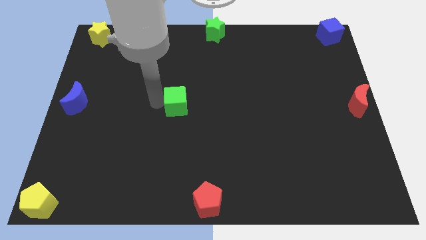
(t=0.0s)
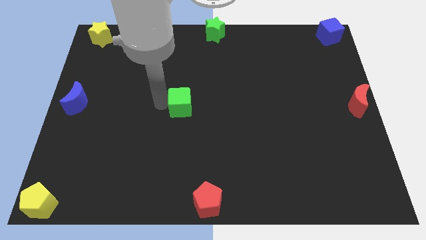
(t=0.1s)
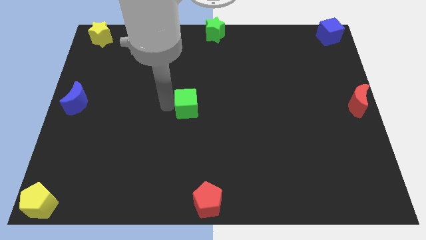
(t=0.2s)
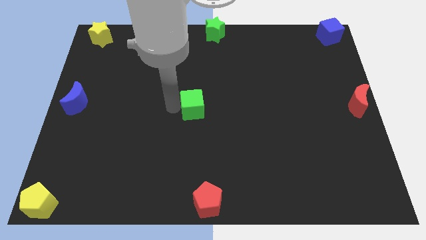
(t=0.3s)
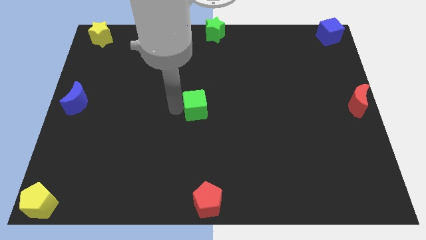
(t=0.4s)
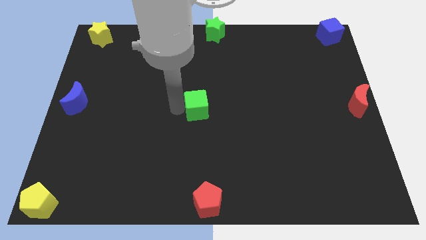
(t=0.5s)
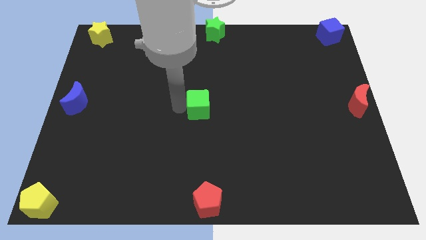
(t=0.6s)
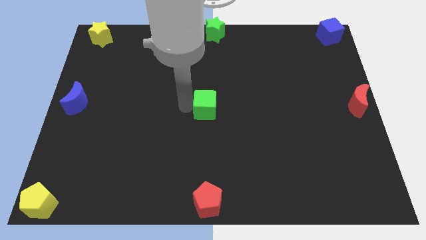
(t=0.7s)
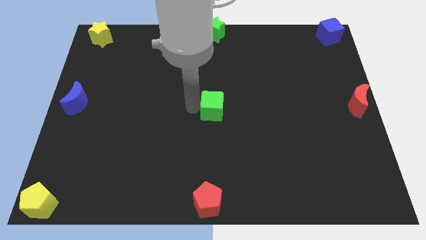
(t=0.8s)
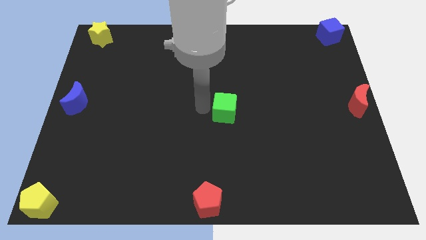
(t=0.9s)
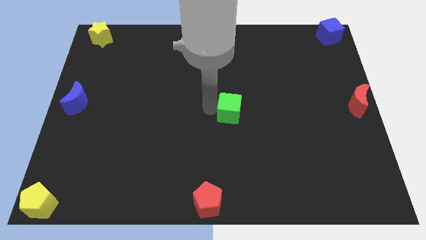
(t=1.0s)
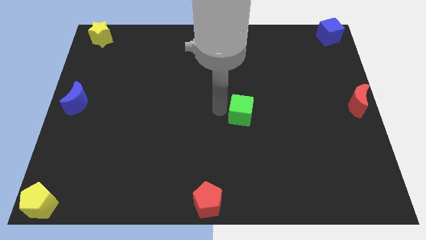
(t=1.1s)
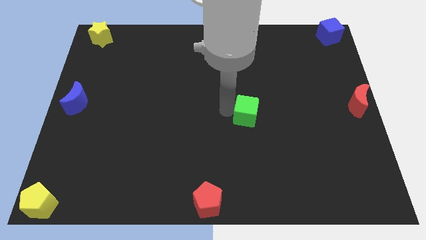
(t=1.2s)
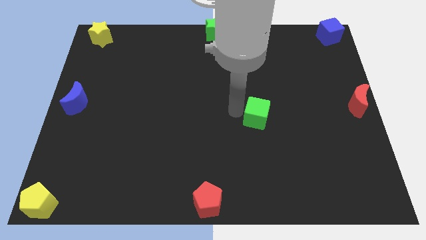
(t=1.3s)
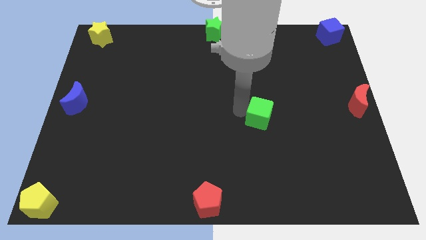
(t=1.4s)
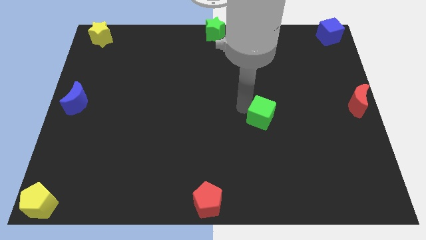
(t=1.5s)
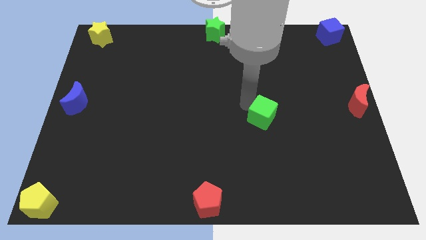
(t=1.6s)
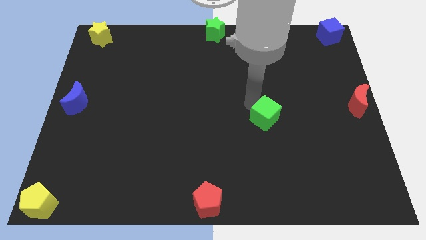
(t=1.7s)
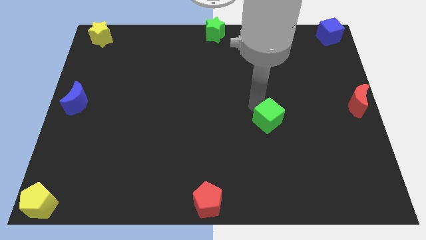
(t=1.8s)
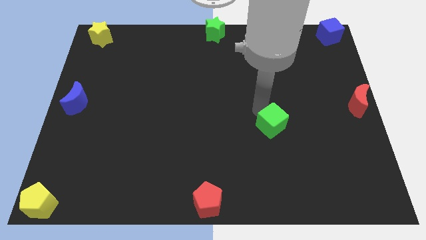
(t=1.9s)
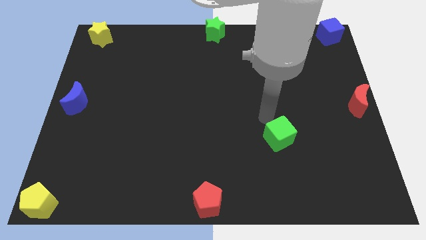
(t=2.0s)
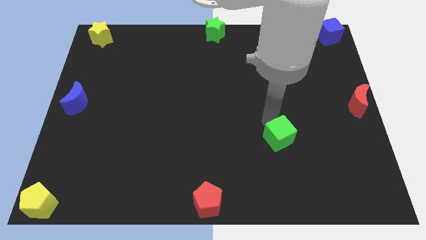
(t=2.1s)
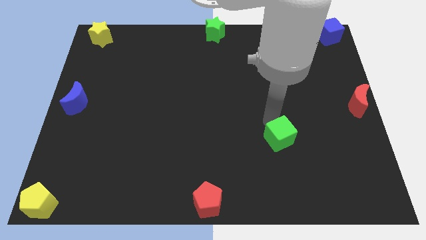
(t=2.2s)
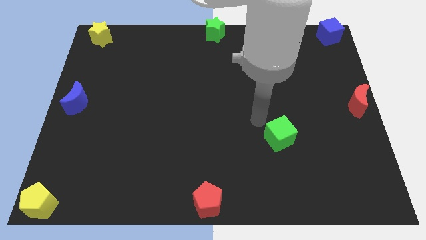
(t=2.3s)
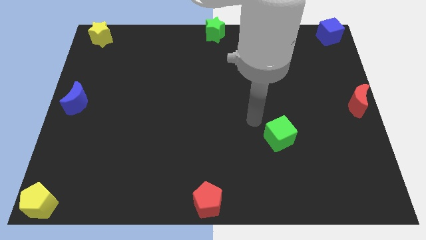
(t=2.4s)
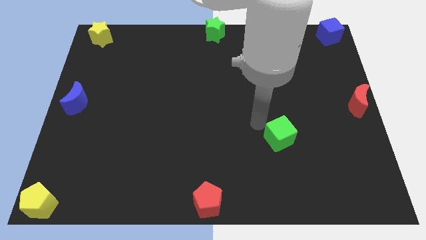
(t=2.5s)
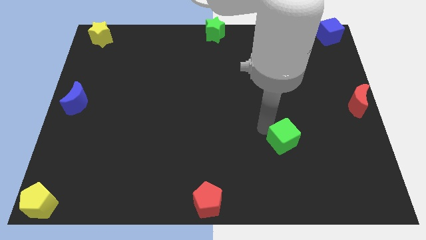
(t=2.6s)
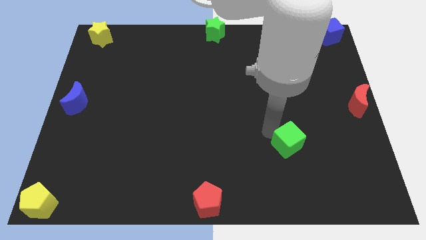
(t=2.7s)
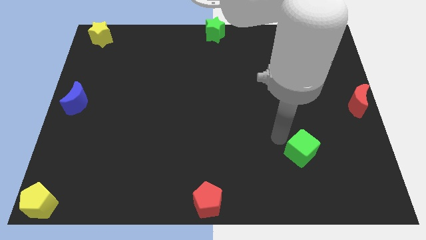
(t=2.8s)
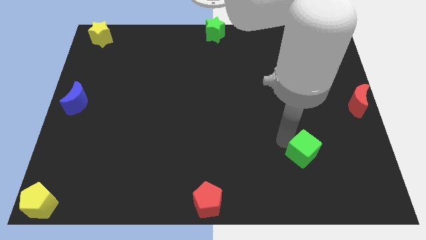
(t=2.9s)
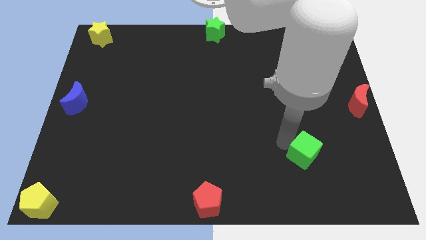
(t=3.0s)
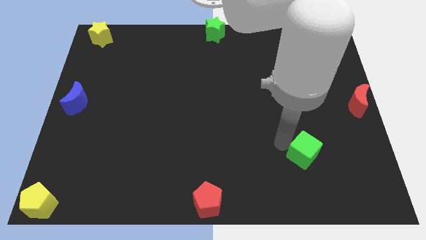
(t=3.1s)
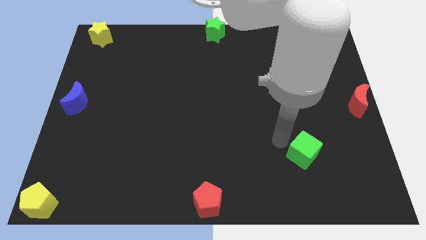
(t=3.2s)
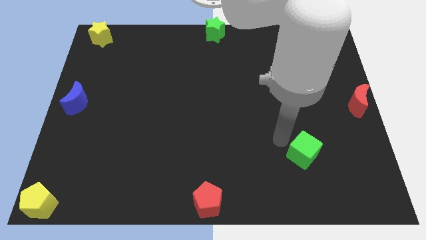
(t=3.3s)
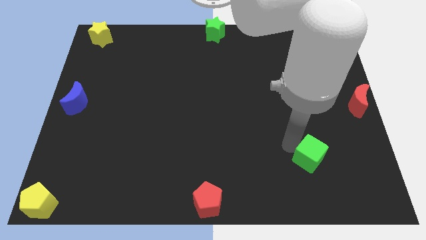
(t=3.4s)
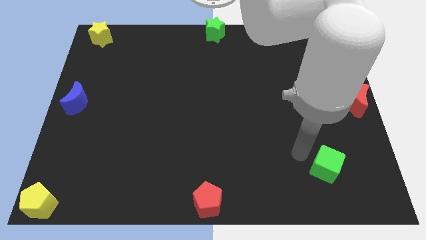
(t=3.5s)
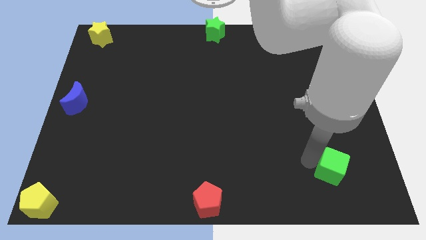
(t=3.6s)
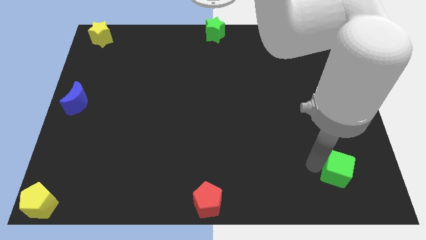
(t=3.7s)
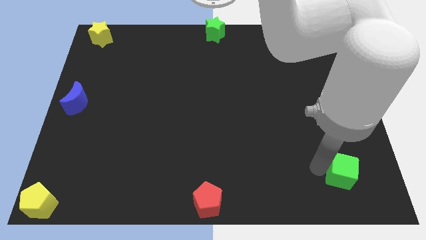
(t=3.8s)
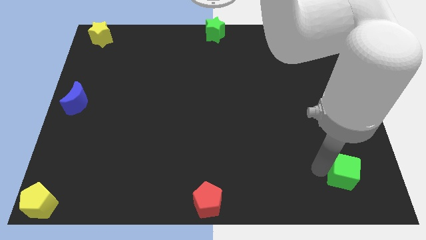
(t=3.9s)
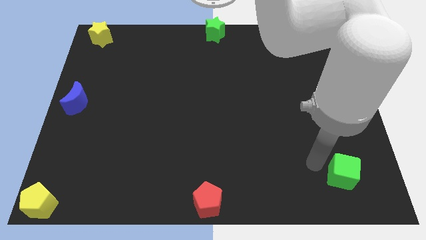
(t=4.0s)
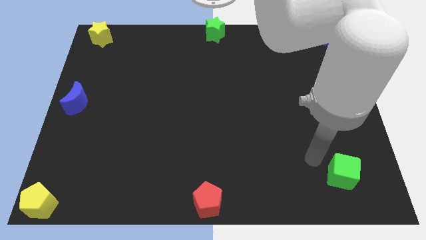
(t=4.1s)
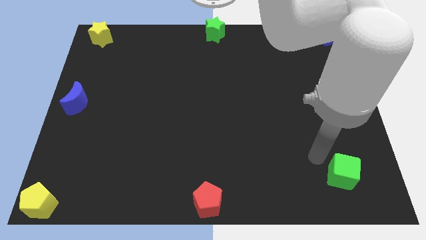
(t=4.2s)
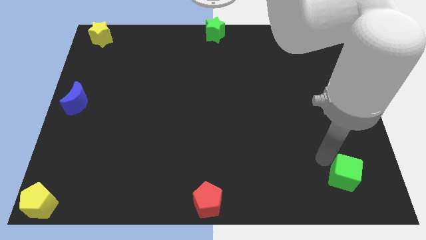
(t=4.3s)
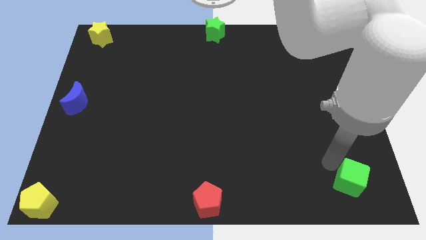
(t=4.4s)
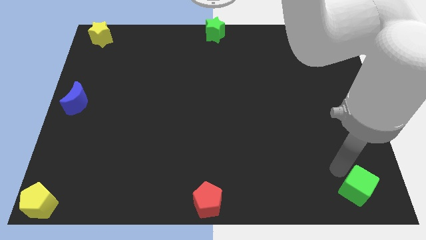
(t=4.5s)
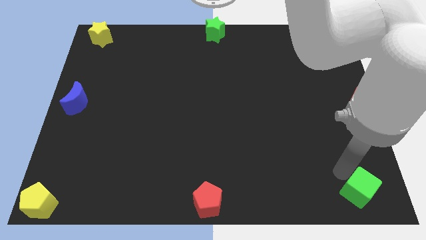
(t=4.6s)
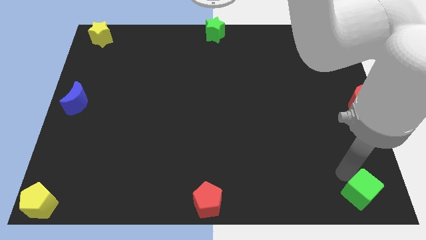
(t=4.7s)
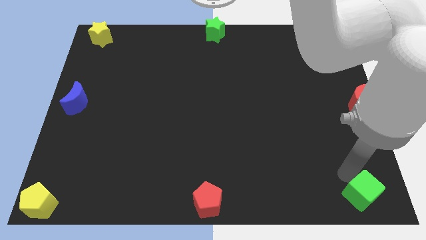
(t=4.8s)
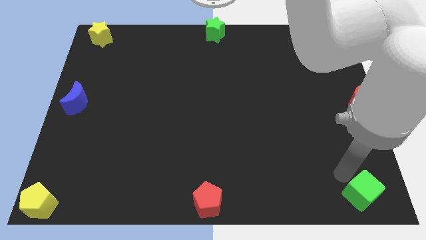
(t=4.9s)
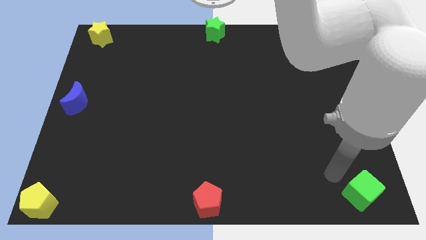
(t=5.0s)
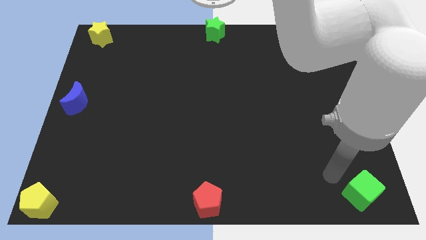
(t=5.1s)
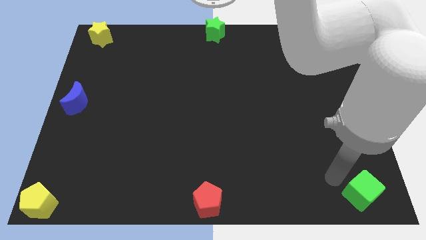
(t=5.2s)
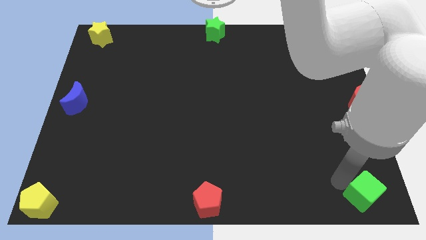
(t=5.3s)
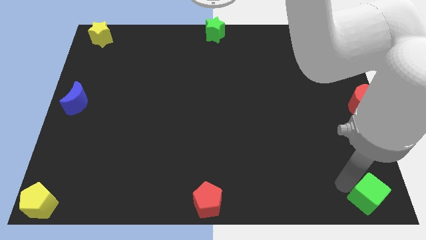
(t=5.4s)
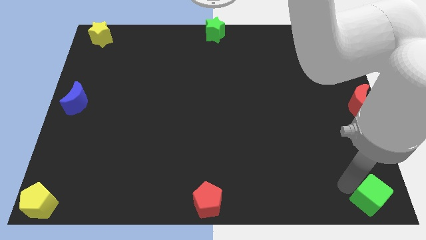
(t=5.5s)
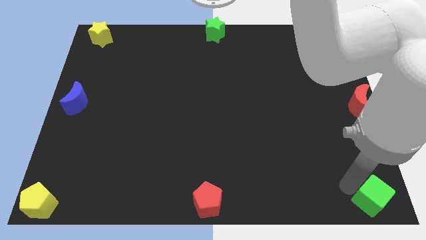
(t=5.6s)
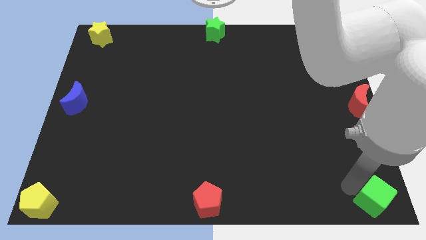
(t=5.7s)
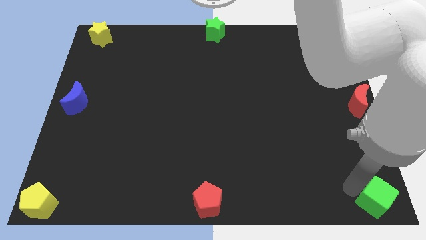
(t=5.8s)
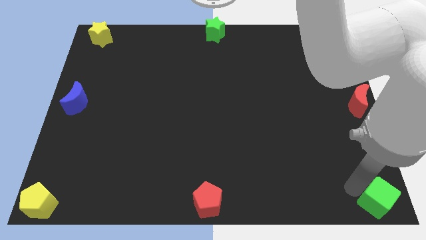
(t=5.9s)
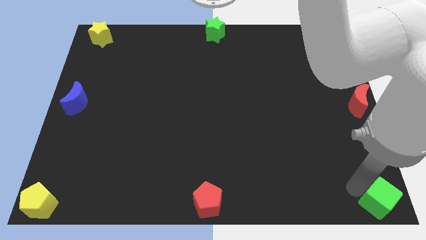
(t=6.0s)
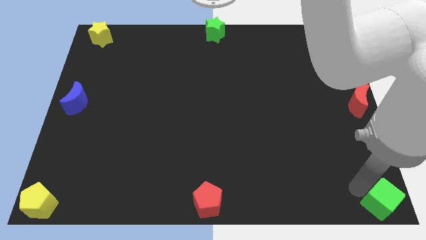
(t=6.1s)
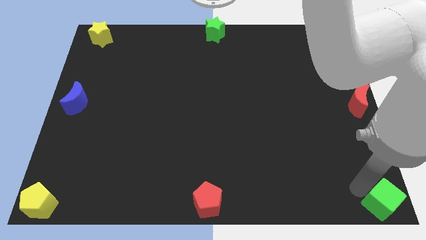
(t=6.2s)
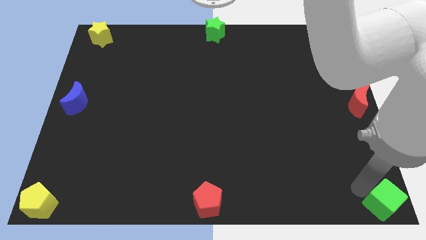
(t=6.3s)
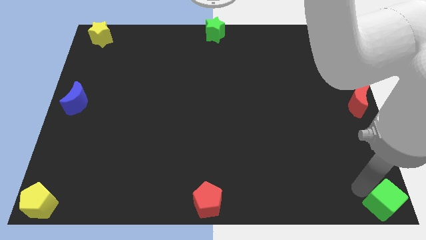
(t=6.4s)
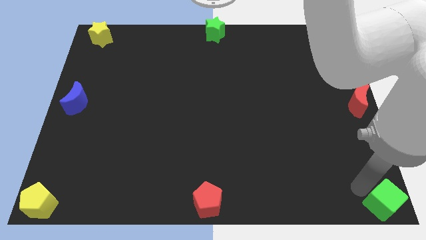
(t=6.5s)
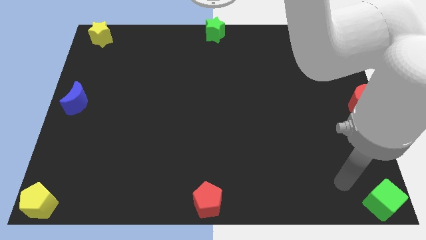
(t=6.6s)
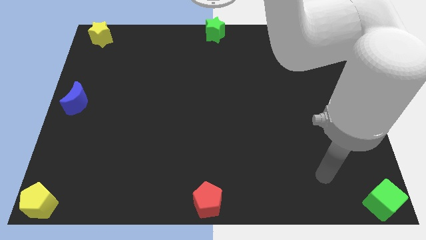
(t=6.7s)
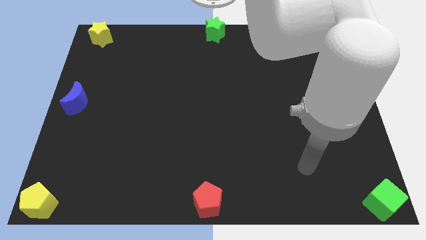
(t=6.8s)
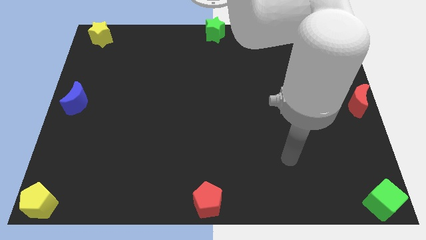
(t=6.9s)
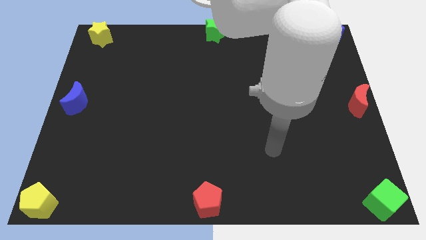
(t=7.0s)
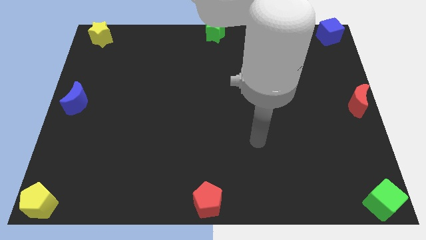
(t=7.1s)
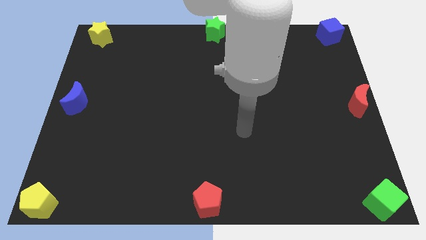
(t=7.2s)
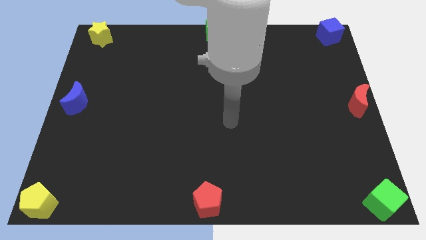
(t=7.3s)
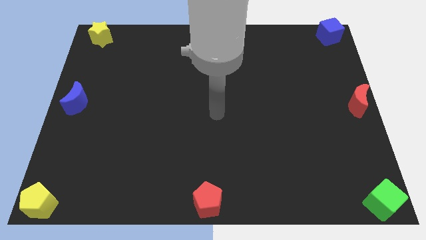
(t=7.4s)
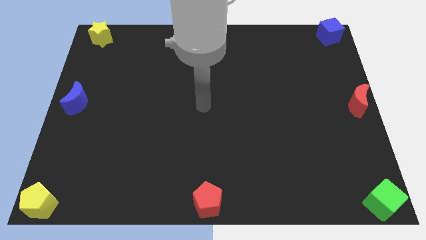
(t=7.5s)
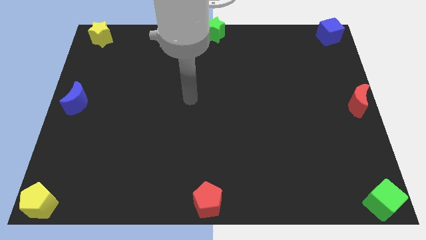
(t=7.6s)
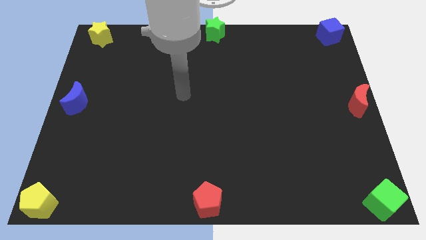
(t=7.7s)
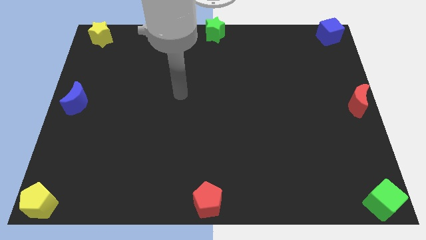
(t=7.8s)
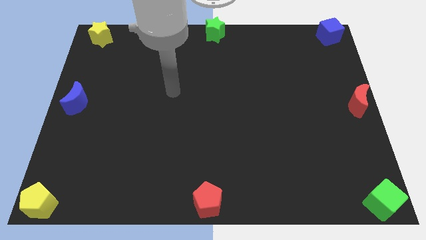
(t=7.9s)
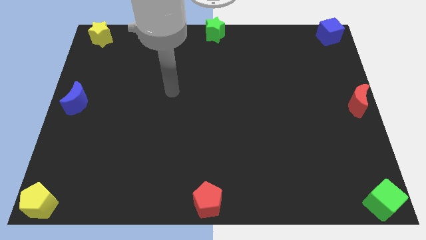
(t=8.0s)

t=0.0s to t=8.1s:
move green cube to the bottom right

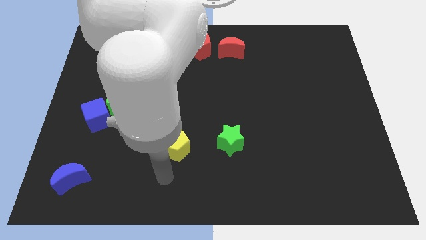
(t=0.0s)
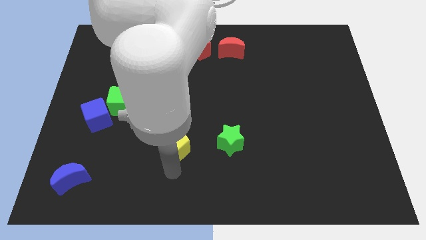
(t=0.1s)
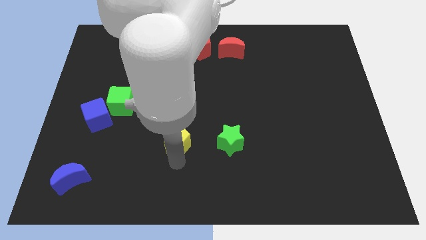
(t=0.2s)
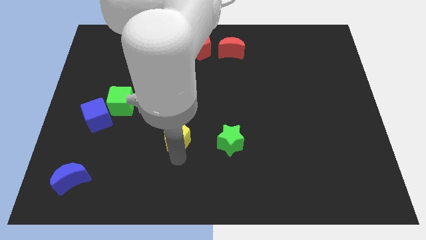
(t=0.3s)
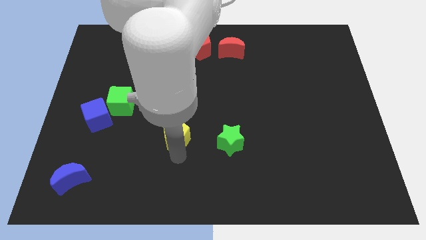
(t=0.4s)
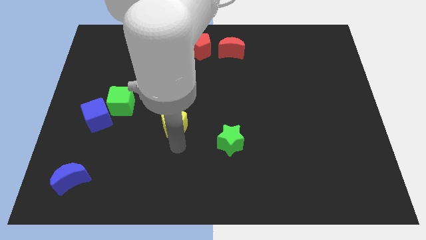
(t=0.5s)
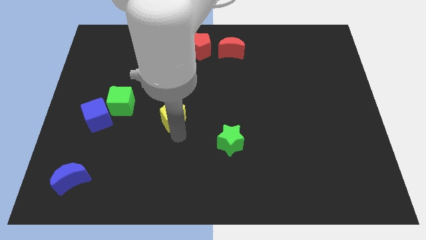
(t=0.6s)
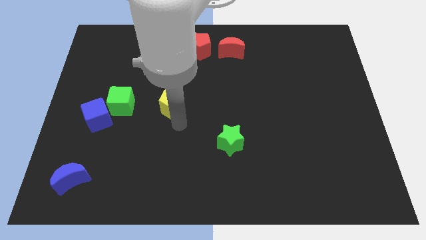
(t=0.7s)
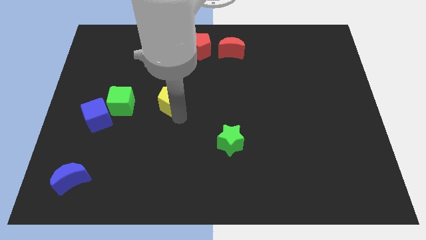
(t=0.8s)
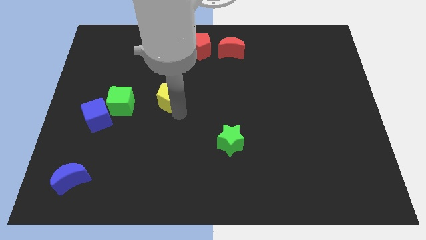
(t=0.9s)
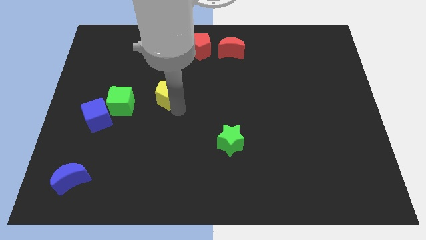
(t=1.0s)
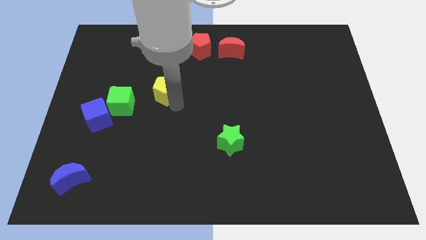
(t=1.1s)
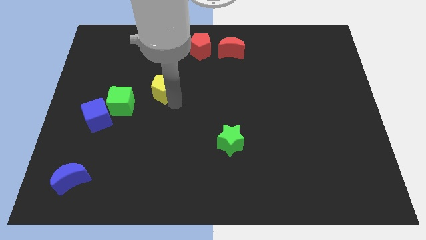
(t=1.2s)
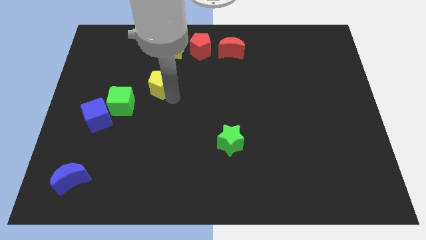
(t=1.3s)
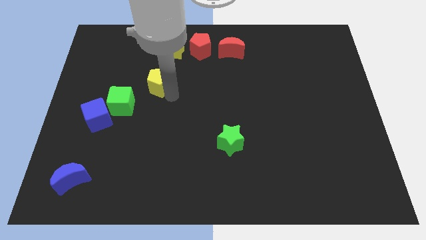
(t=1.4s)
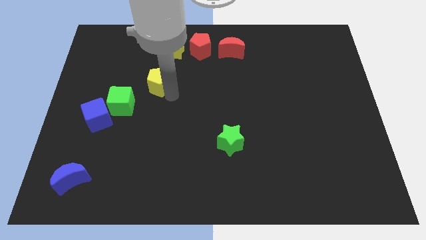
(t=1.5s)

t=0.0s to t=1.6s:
move the yellow pentagon diagonal to the green cube
